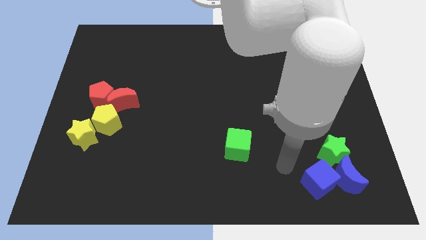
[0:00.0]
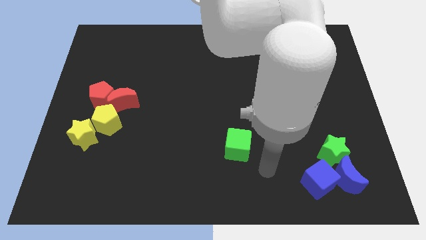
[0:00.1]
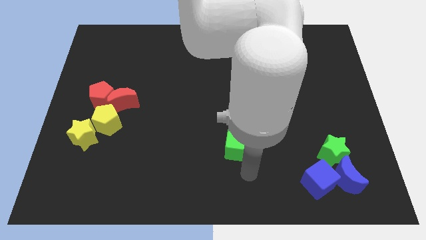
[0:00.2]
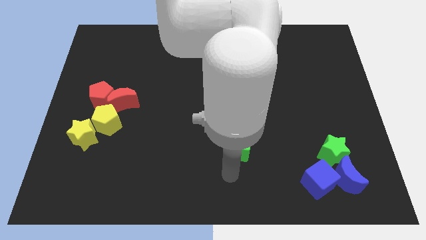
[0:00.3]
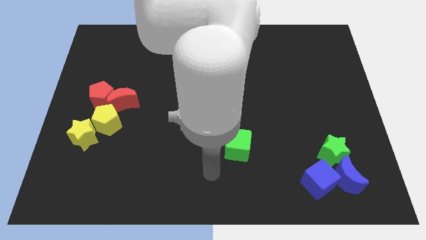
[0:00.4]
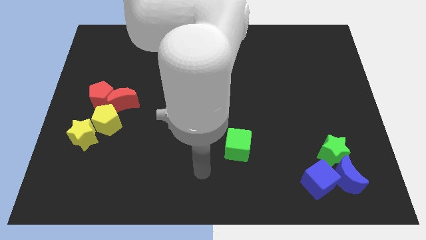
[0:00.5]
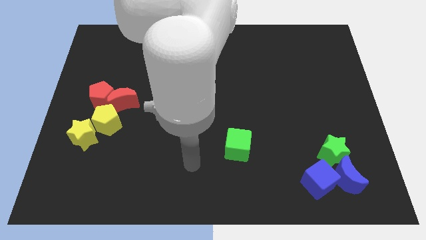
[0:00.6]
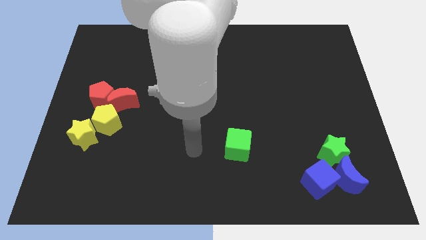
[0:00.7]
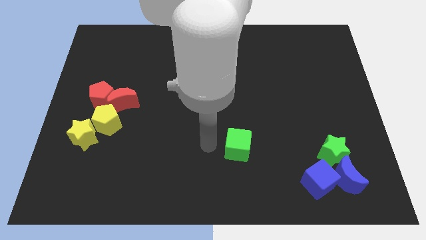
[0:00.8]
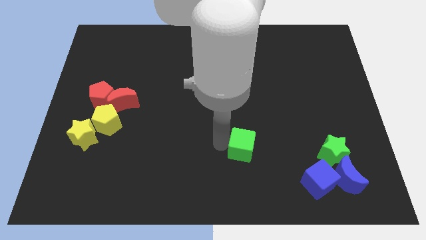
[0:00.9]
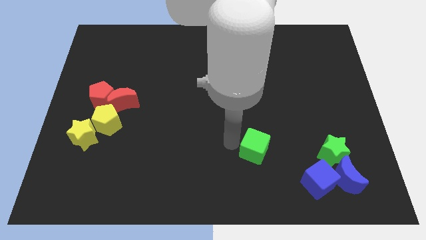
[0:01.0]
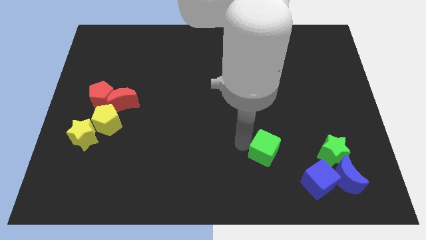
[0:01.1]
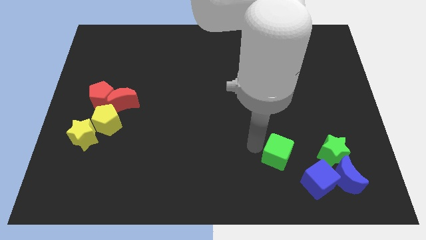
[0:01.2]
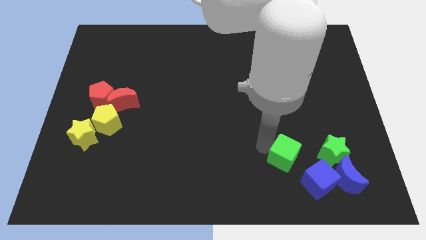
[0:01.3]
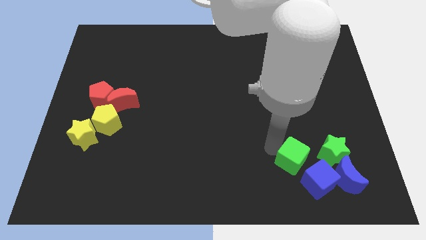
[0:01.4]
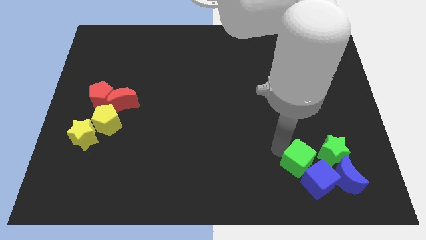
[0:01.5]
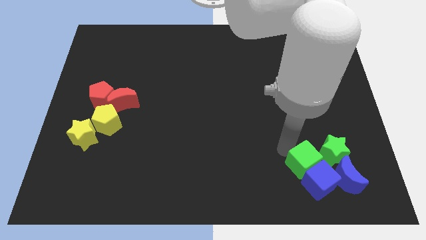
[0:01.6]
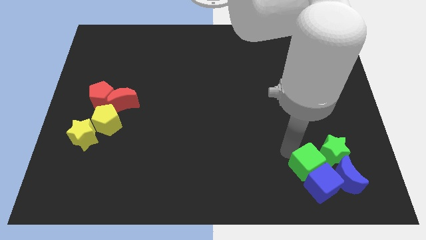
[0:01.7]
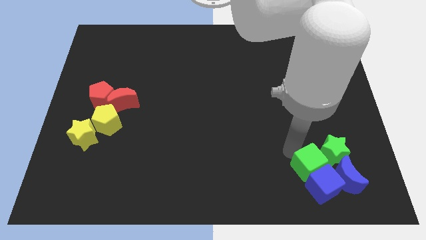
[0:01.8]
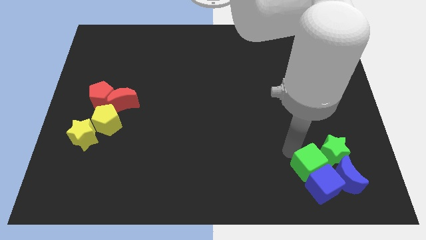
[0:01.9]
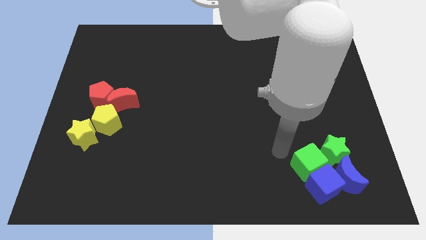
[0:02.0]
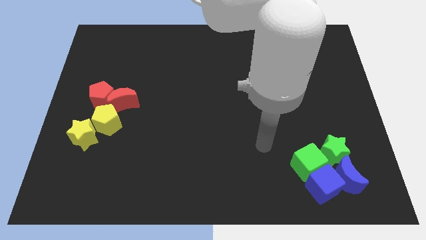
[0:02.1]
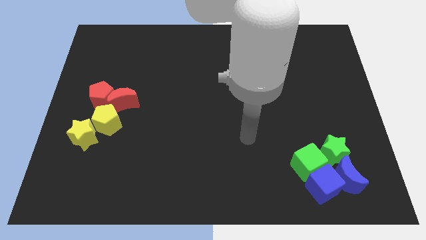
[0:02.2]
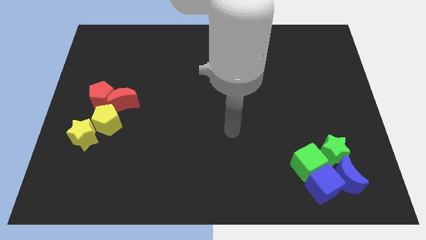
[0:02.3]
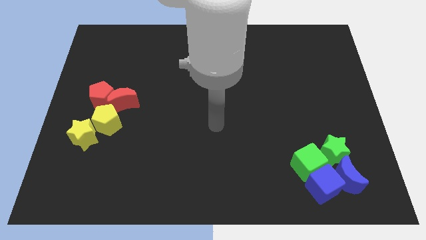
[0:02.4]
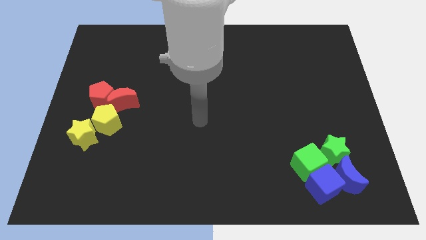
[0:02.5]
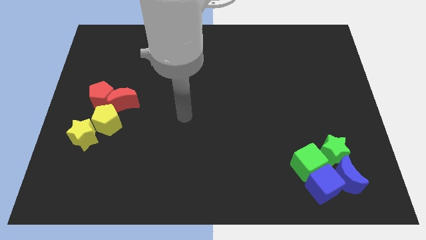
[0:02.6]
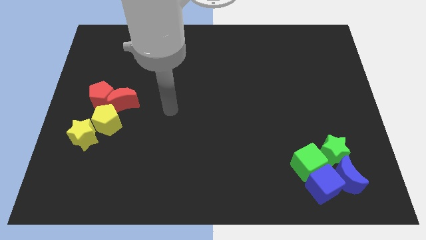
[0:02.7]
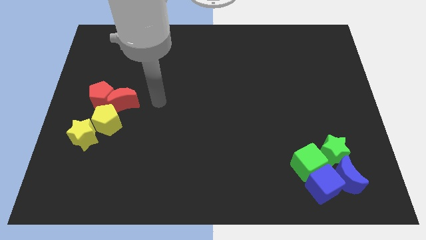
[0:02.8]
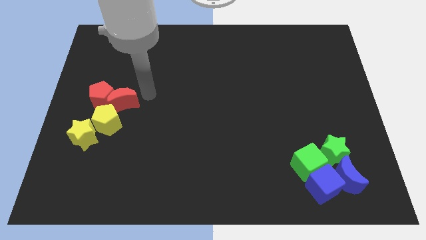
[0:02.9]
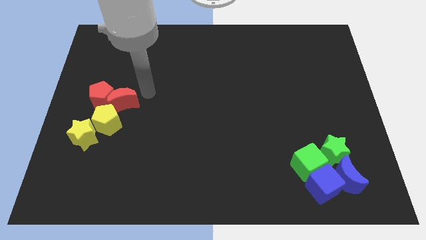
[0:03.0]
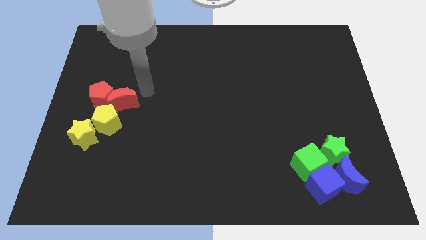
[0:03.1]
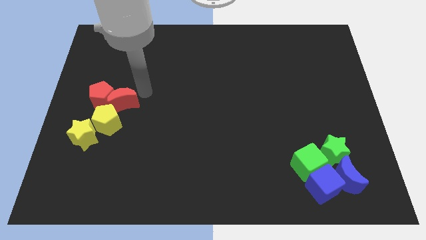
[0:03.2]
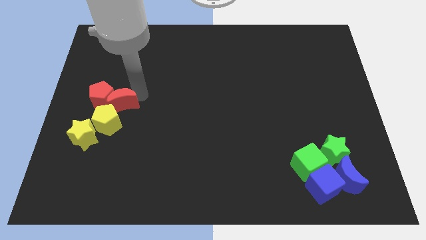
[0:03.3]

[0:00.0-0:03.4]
place the green cube to the left of green star

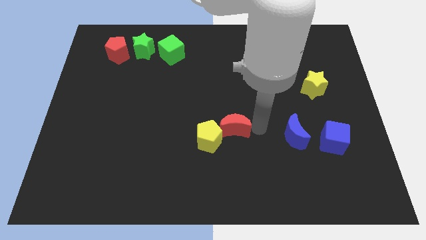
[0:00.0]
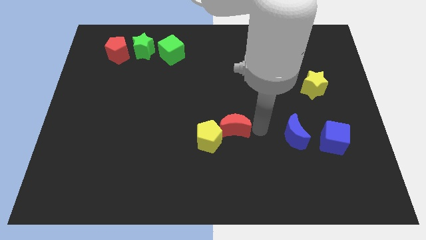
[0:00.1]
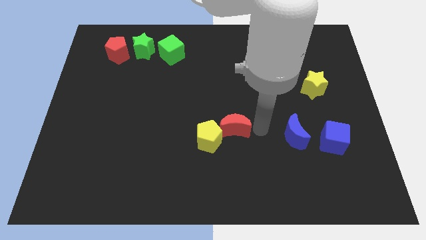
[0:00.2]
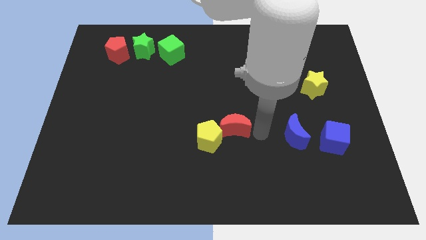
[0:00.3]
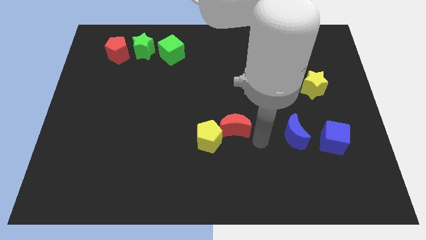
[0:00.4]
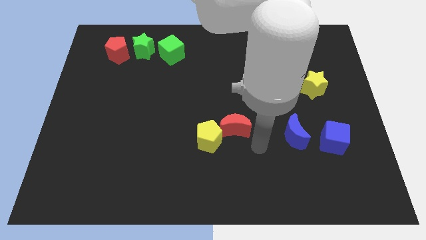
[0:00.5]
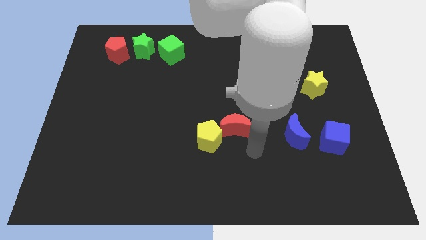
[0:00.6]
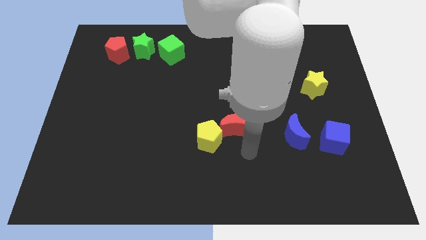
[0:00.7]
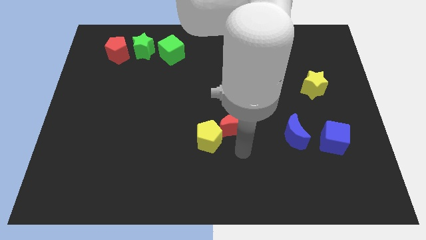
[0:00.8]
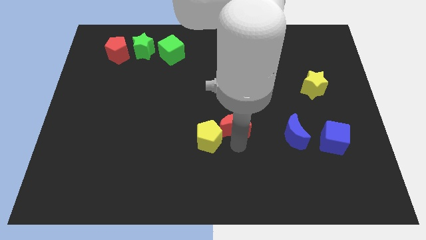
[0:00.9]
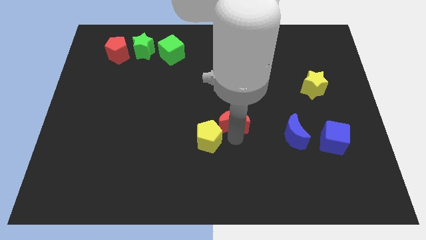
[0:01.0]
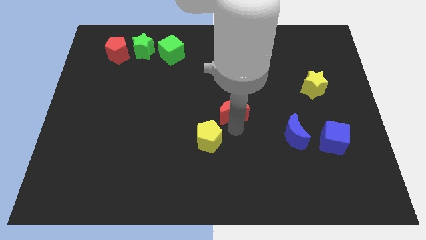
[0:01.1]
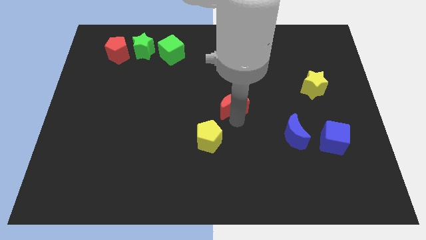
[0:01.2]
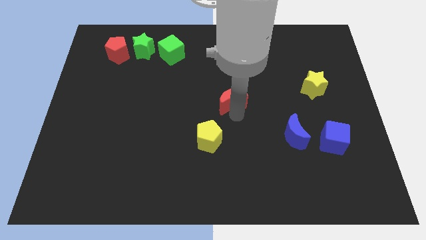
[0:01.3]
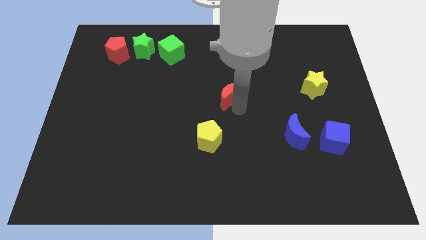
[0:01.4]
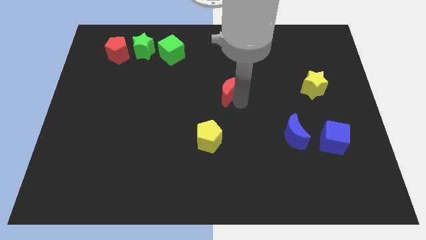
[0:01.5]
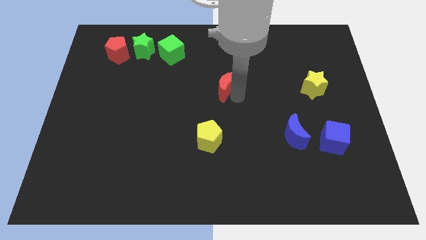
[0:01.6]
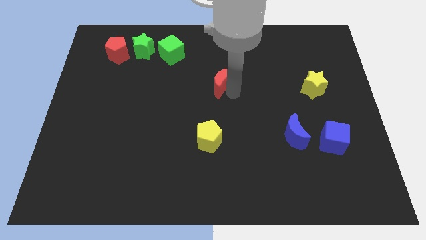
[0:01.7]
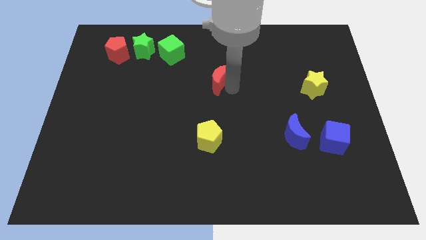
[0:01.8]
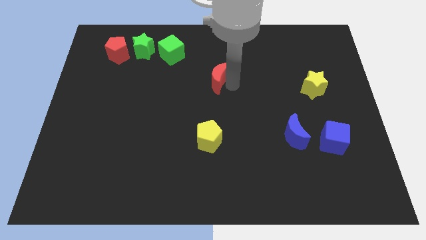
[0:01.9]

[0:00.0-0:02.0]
place the red moon above the yellow pentagon

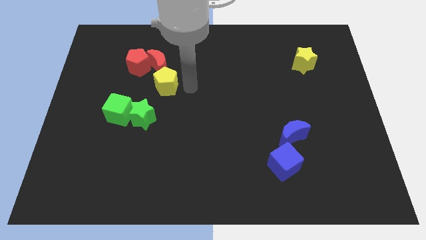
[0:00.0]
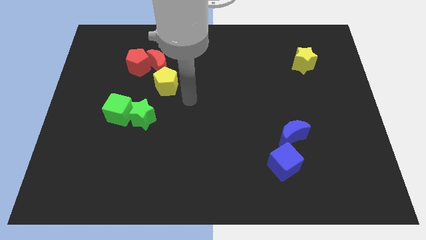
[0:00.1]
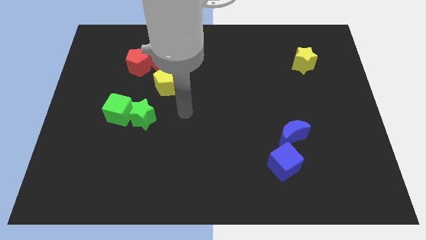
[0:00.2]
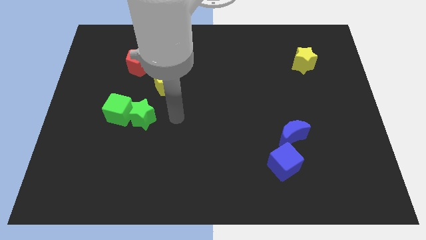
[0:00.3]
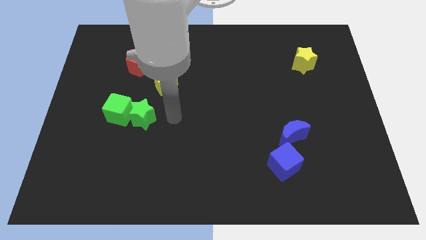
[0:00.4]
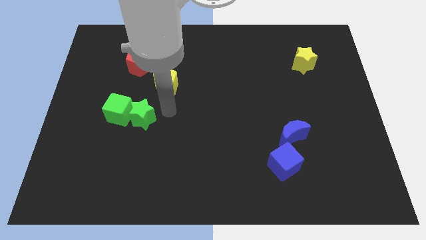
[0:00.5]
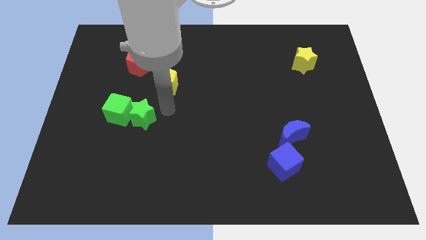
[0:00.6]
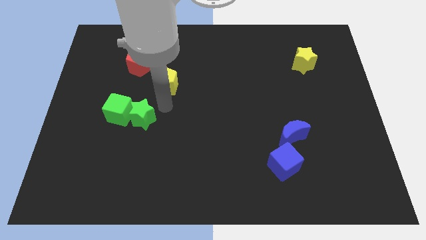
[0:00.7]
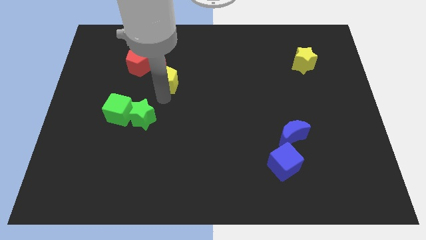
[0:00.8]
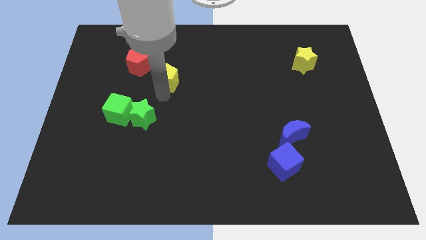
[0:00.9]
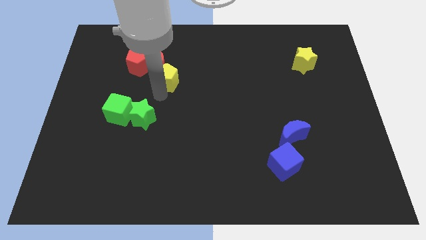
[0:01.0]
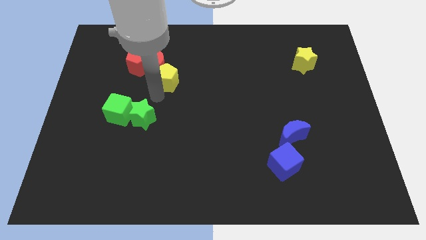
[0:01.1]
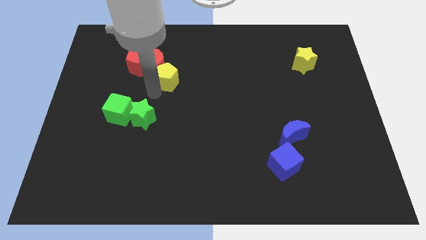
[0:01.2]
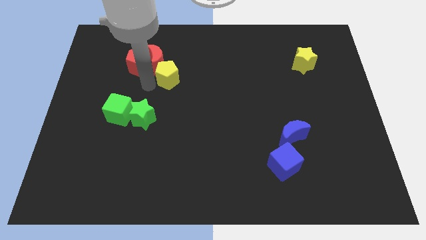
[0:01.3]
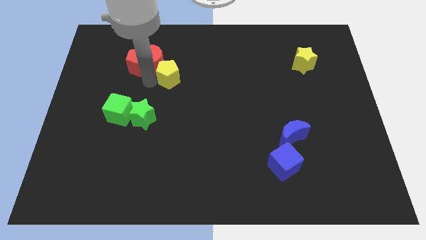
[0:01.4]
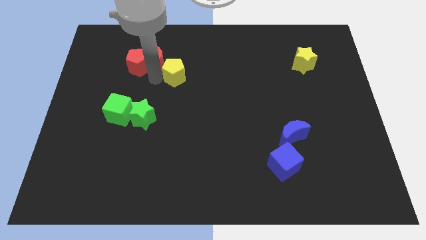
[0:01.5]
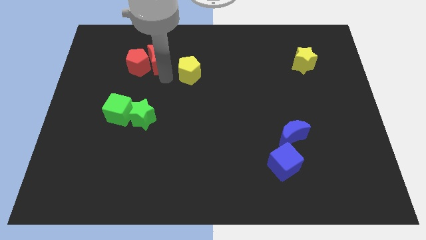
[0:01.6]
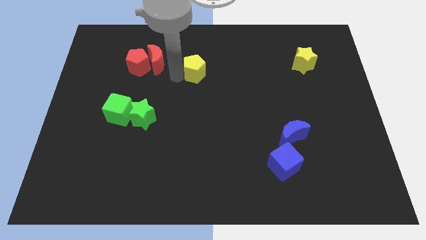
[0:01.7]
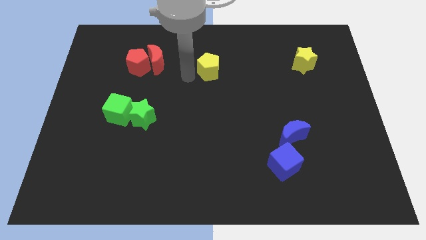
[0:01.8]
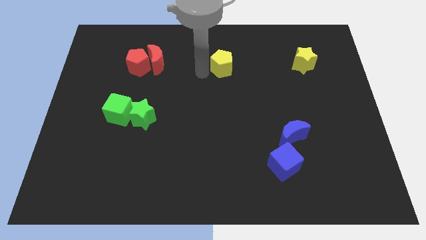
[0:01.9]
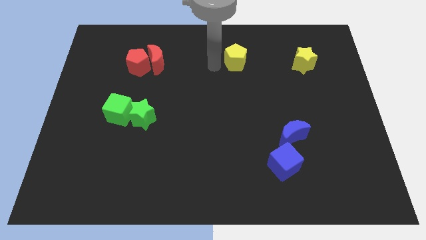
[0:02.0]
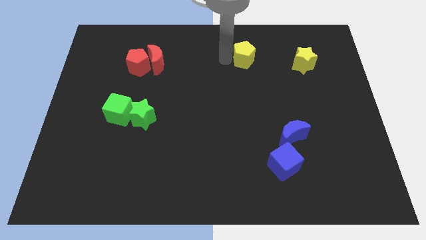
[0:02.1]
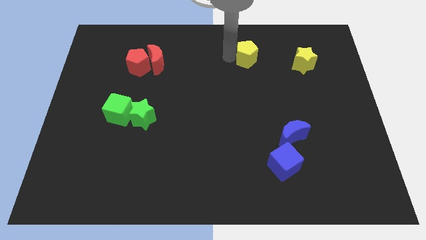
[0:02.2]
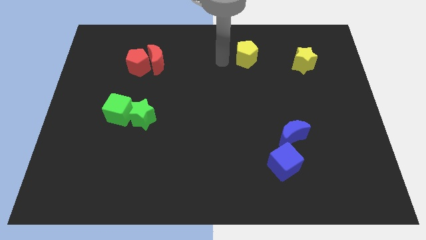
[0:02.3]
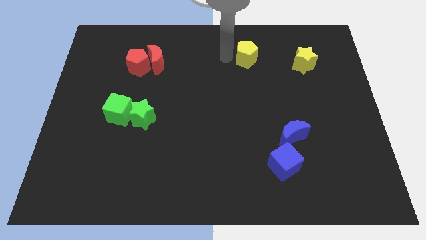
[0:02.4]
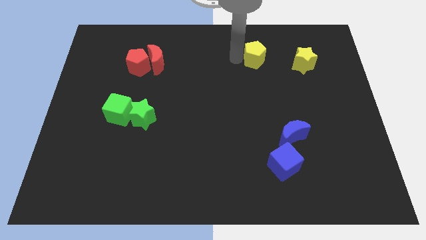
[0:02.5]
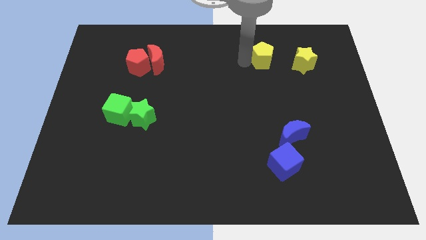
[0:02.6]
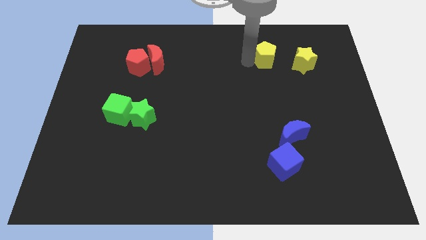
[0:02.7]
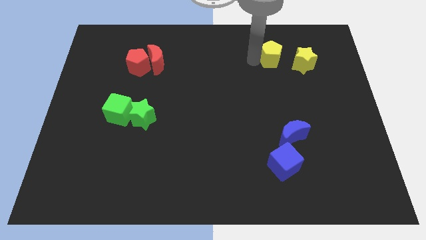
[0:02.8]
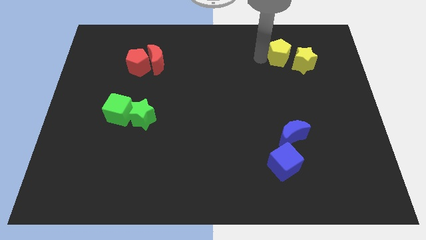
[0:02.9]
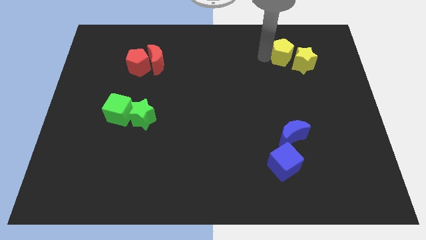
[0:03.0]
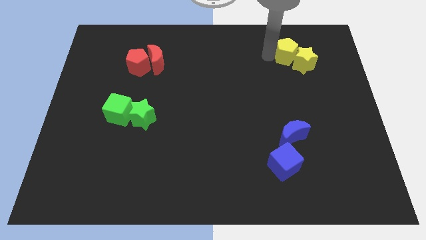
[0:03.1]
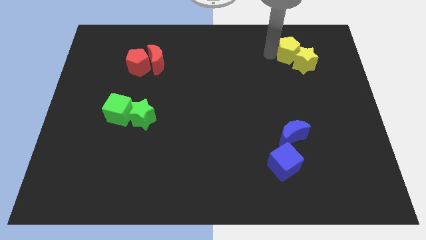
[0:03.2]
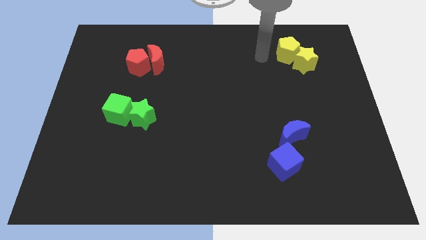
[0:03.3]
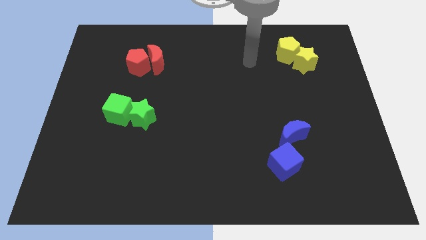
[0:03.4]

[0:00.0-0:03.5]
push the yellow pentagon into the yellow star

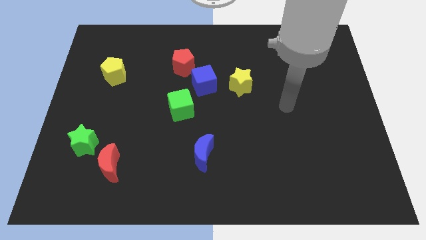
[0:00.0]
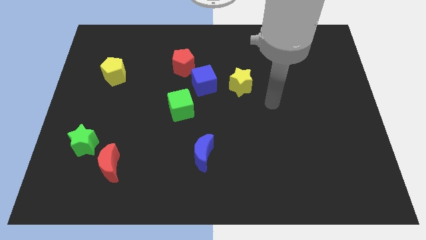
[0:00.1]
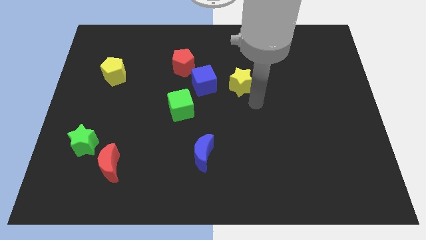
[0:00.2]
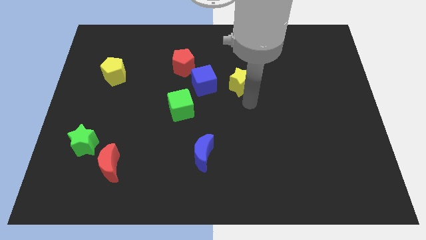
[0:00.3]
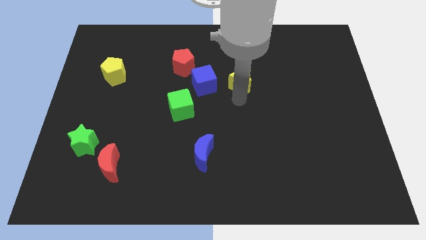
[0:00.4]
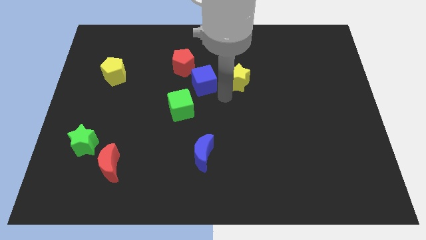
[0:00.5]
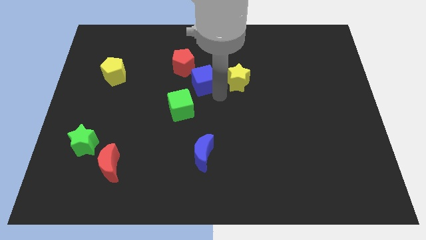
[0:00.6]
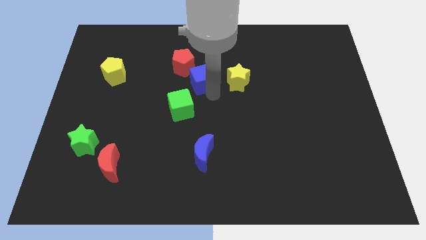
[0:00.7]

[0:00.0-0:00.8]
put arm at the bottom of blue cube
